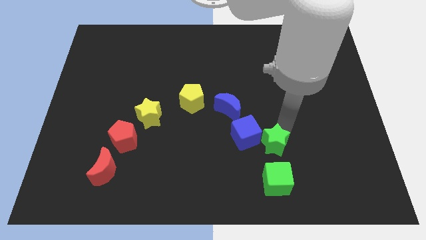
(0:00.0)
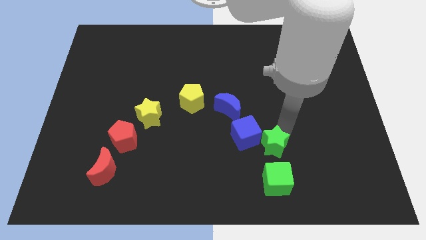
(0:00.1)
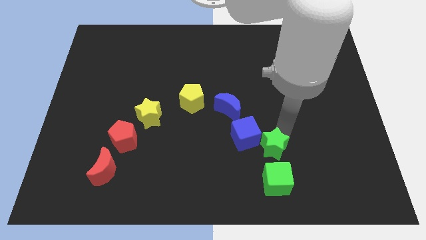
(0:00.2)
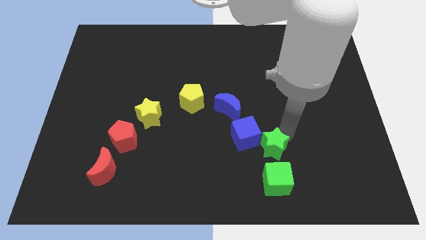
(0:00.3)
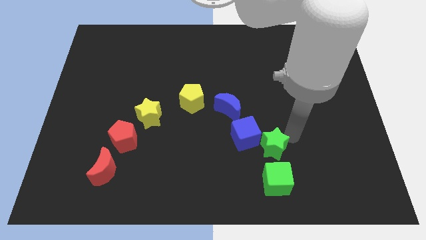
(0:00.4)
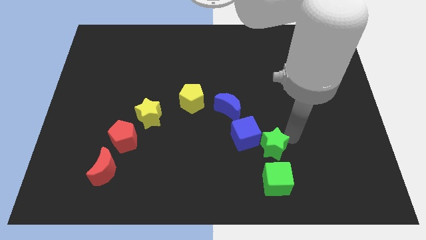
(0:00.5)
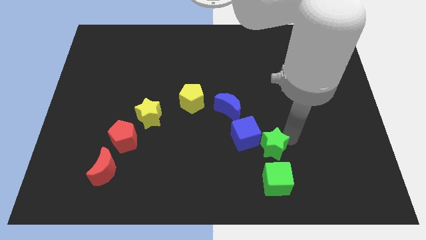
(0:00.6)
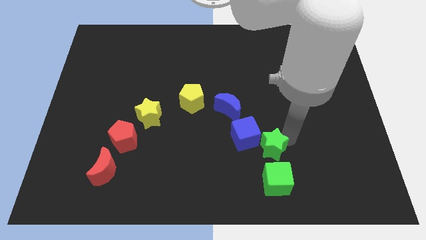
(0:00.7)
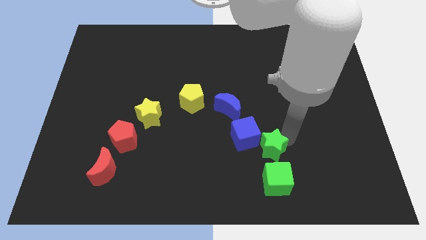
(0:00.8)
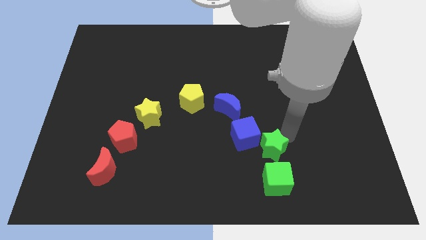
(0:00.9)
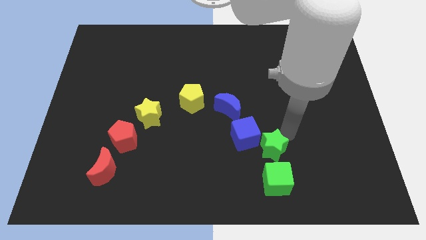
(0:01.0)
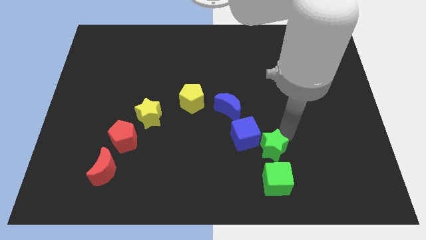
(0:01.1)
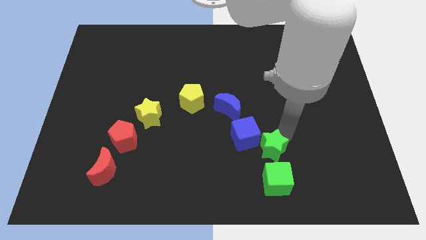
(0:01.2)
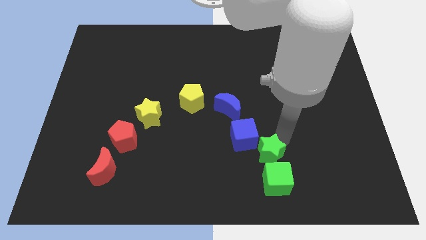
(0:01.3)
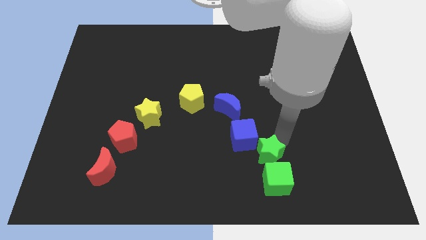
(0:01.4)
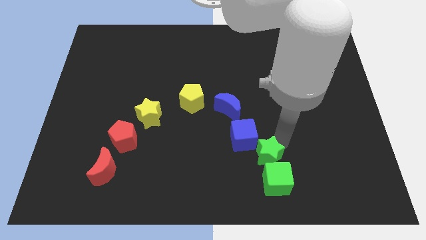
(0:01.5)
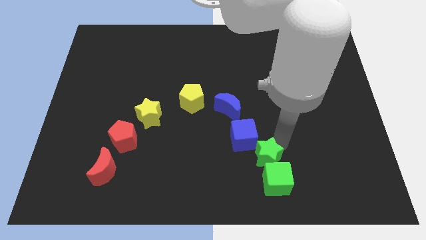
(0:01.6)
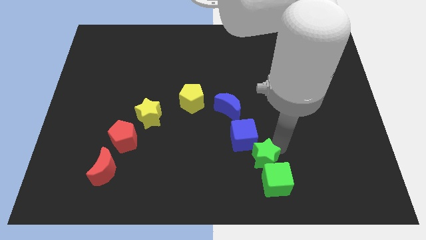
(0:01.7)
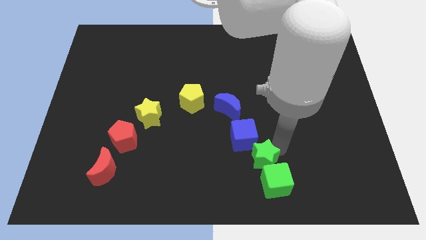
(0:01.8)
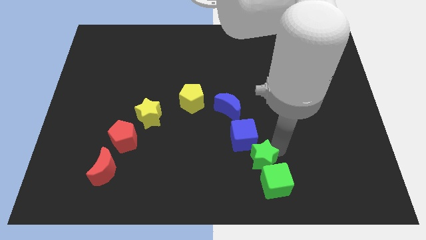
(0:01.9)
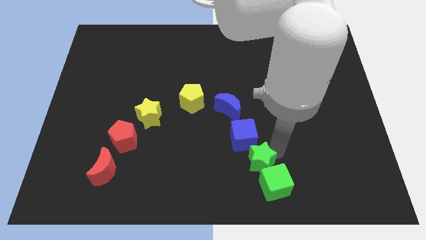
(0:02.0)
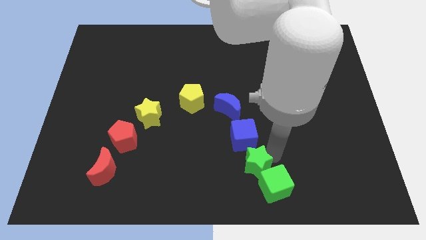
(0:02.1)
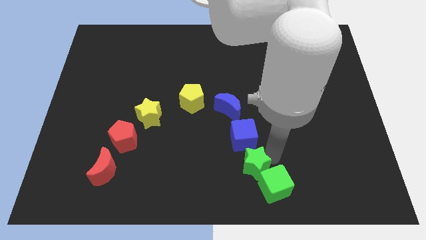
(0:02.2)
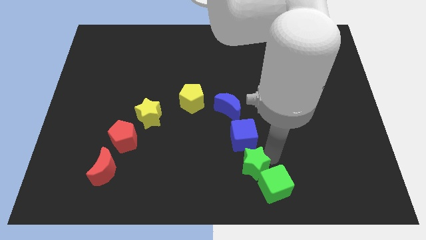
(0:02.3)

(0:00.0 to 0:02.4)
adjust the green star in between the green cube and the blue cube

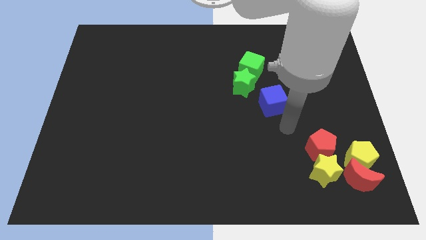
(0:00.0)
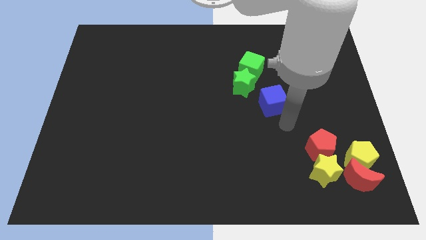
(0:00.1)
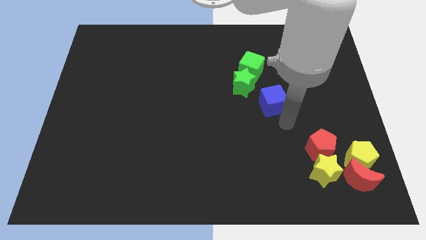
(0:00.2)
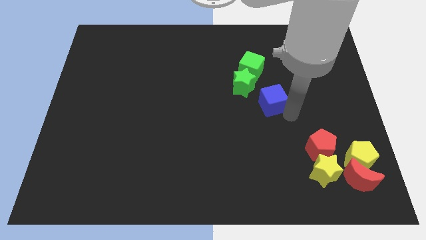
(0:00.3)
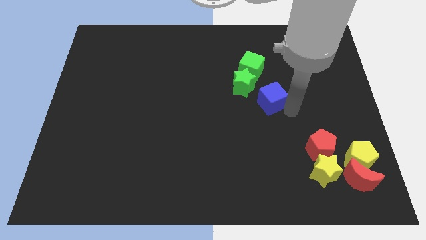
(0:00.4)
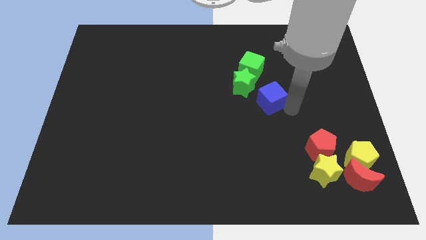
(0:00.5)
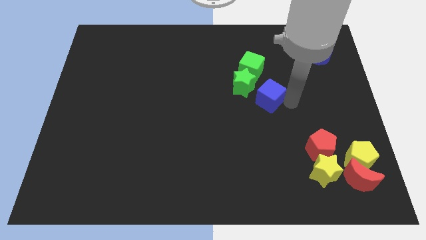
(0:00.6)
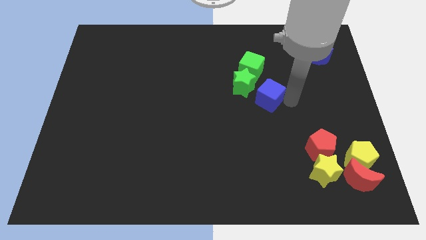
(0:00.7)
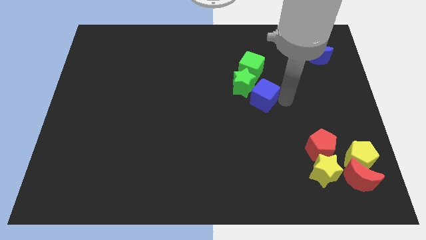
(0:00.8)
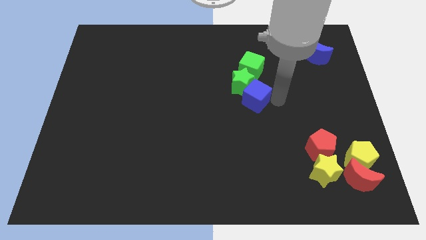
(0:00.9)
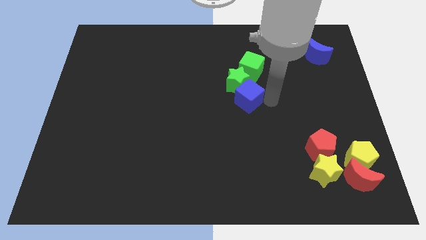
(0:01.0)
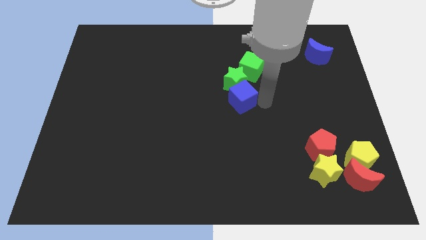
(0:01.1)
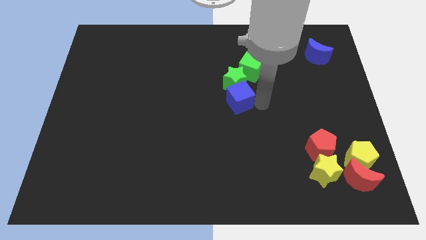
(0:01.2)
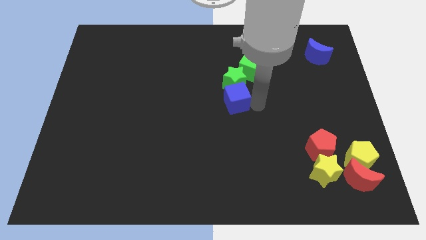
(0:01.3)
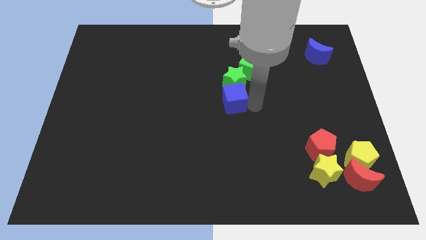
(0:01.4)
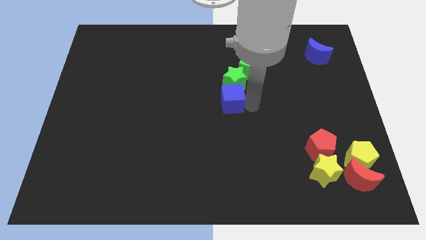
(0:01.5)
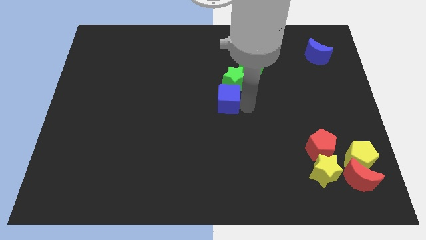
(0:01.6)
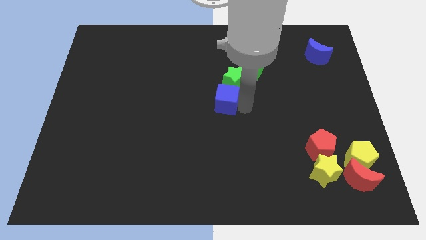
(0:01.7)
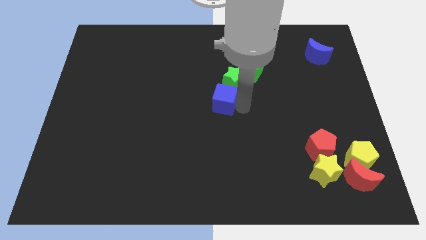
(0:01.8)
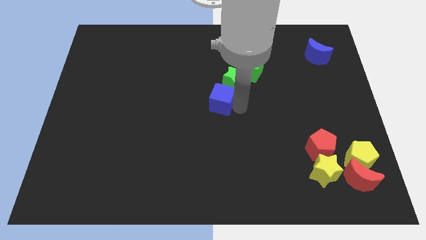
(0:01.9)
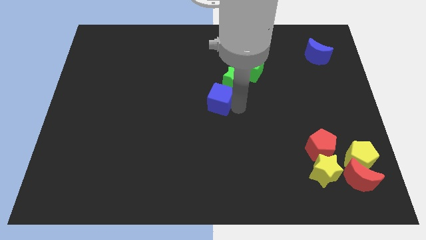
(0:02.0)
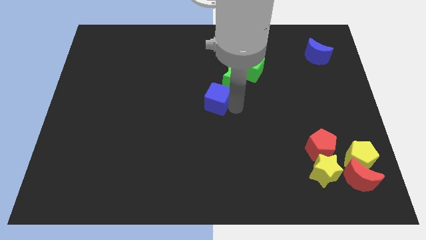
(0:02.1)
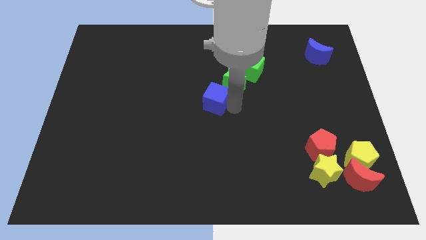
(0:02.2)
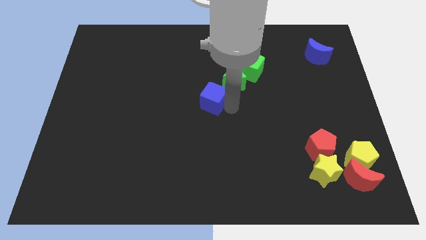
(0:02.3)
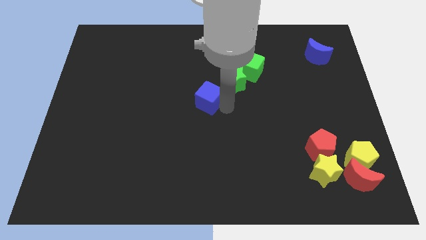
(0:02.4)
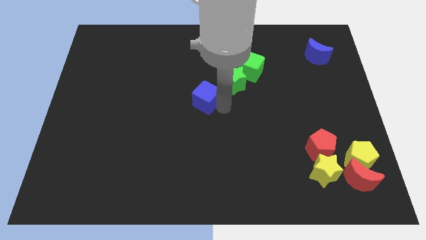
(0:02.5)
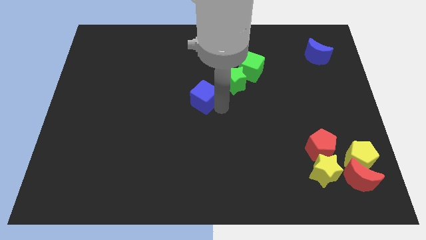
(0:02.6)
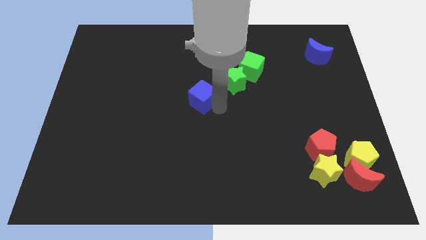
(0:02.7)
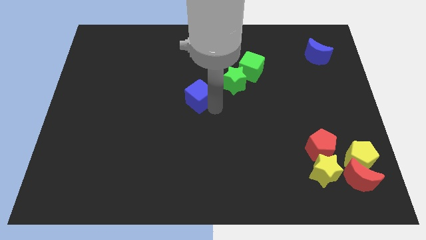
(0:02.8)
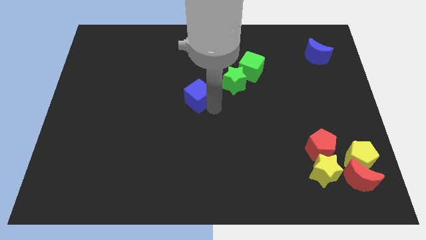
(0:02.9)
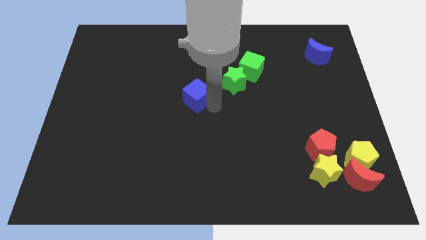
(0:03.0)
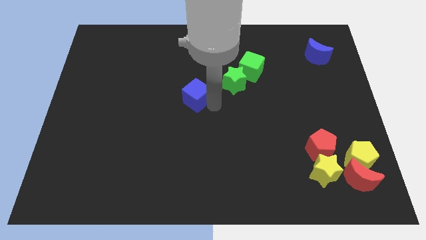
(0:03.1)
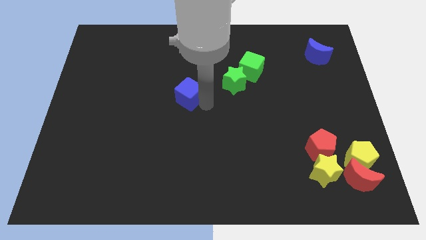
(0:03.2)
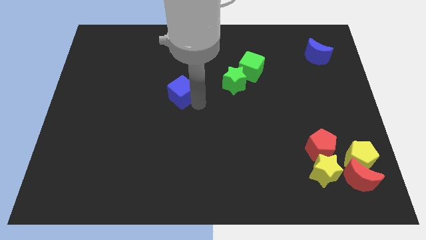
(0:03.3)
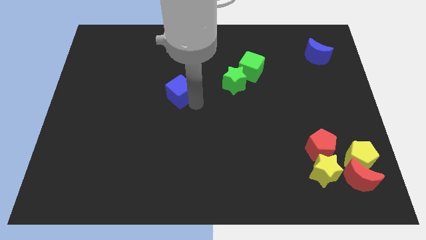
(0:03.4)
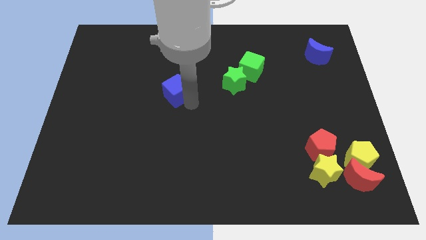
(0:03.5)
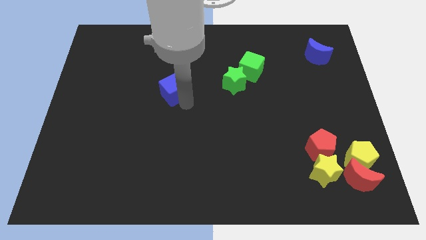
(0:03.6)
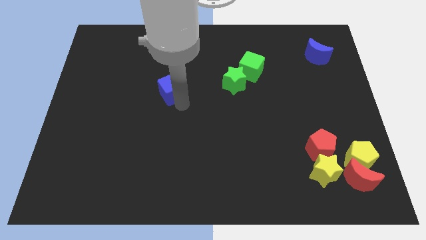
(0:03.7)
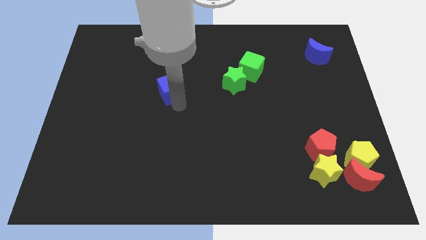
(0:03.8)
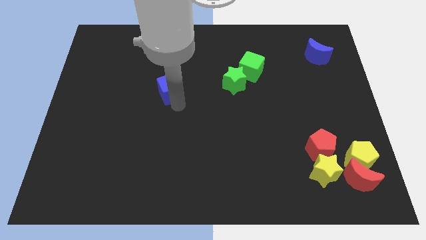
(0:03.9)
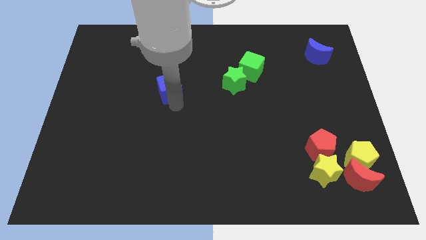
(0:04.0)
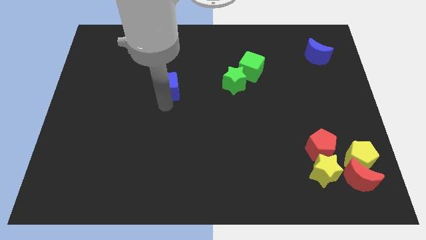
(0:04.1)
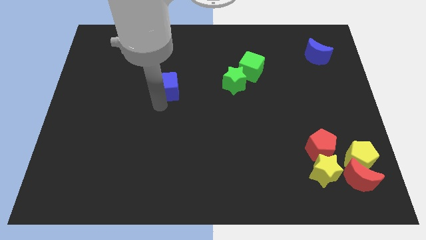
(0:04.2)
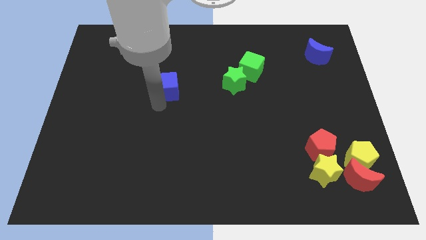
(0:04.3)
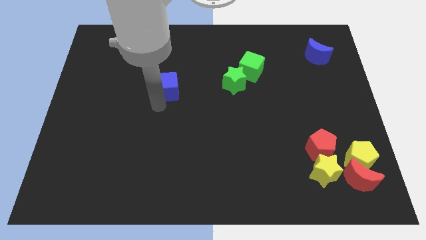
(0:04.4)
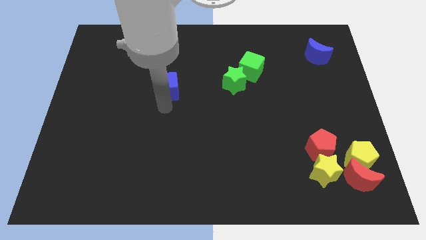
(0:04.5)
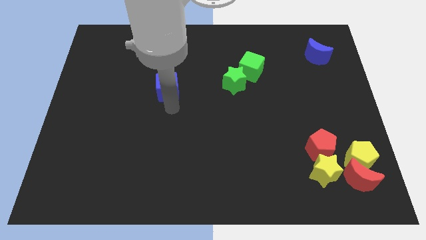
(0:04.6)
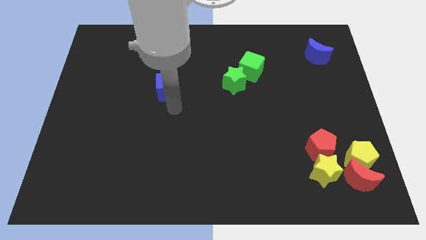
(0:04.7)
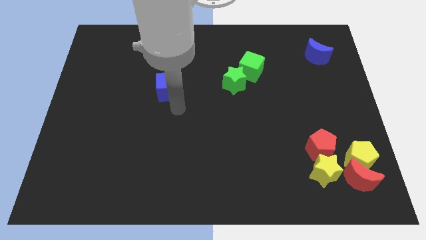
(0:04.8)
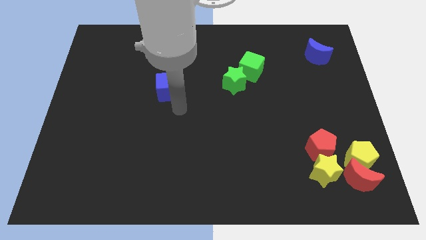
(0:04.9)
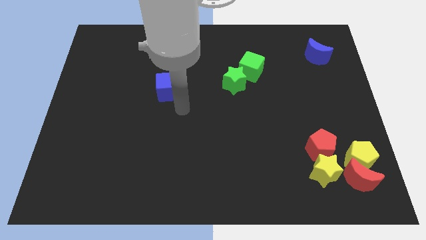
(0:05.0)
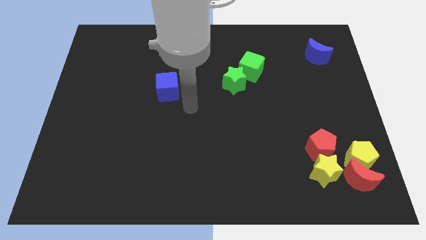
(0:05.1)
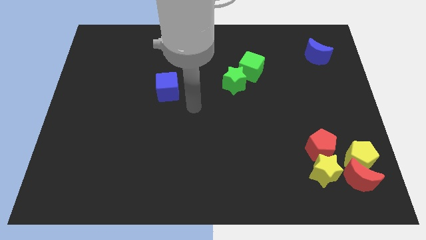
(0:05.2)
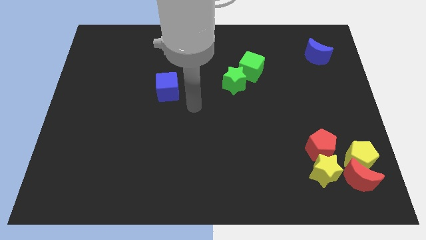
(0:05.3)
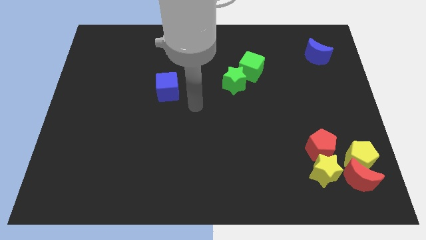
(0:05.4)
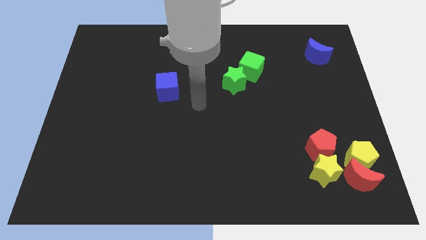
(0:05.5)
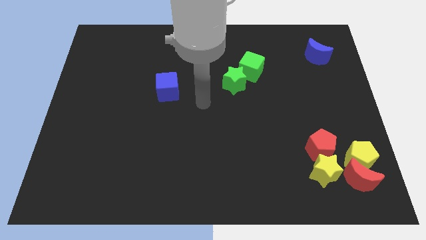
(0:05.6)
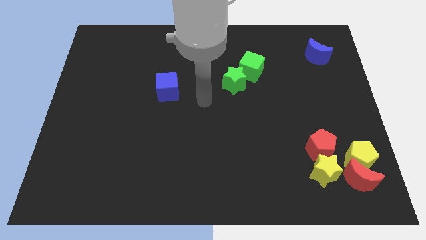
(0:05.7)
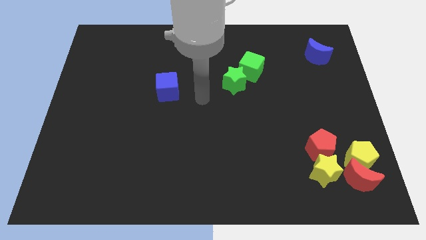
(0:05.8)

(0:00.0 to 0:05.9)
move blue cube towards left

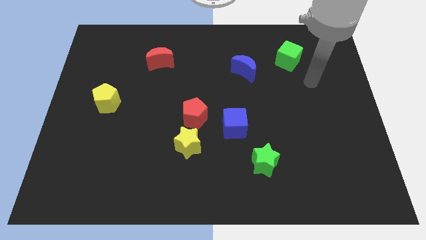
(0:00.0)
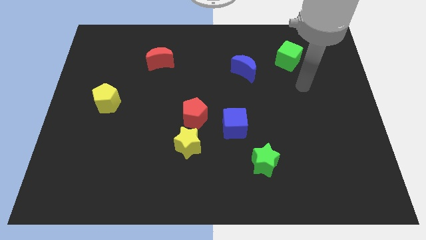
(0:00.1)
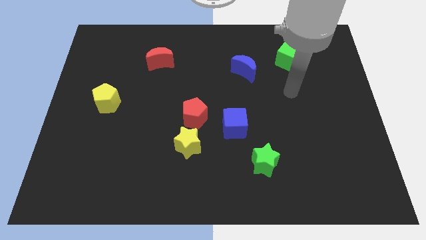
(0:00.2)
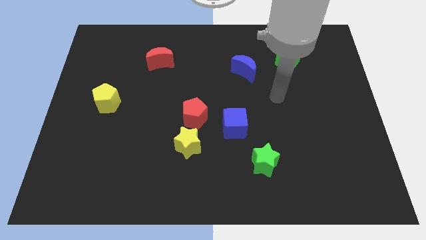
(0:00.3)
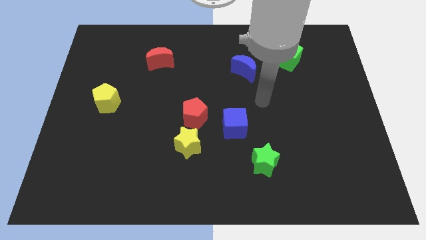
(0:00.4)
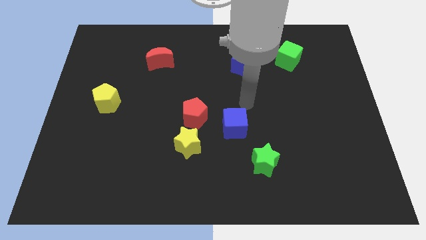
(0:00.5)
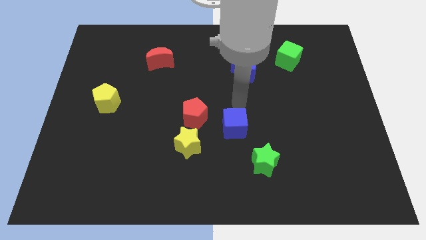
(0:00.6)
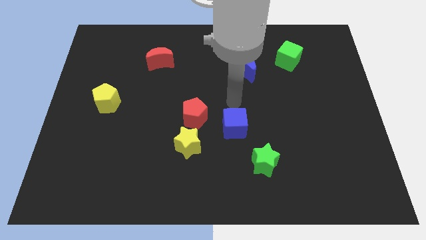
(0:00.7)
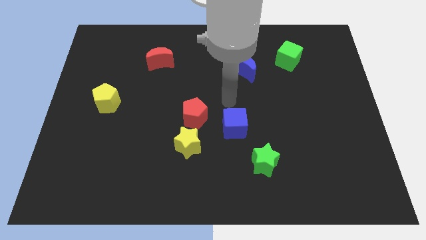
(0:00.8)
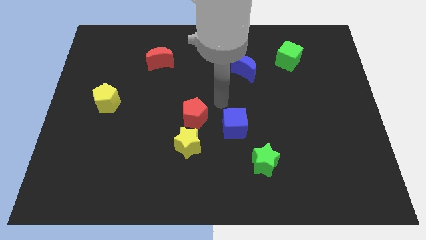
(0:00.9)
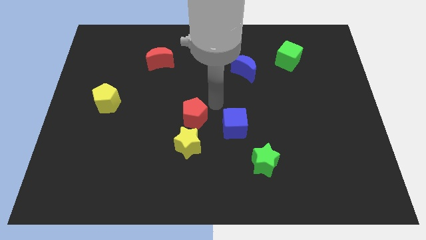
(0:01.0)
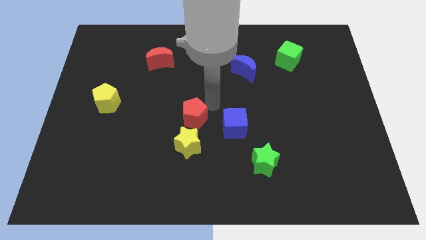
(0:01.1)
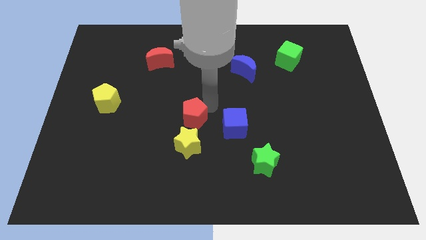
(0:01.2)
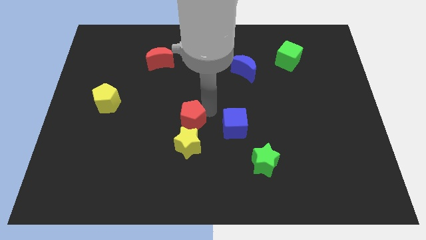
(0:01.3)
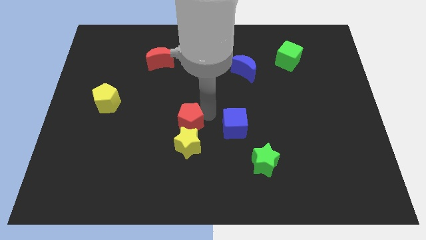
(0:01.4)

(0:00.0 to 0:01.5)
tap the red pentagon
